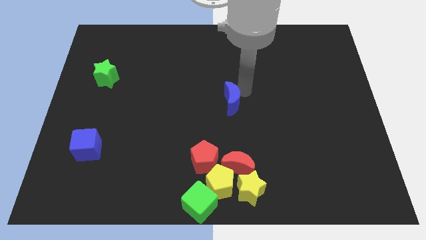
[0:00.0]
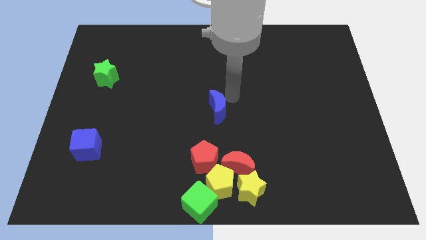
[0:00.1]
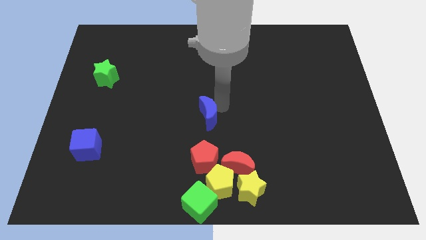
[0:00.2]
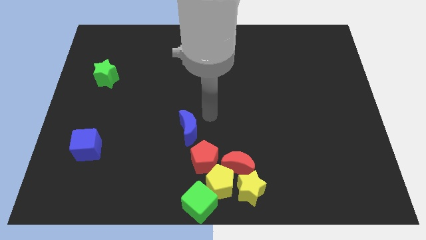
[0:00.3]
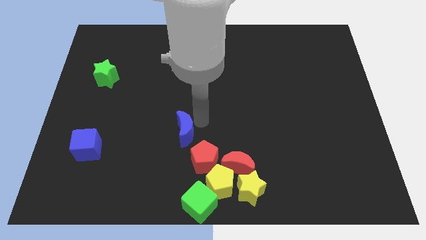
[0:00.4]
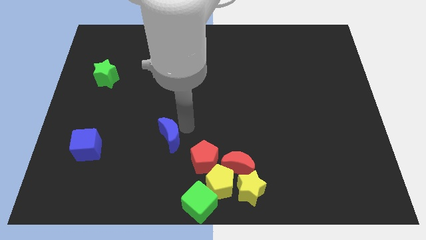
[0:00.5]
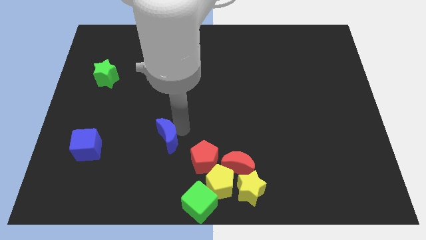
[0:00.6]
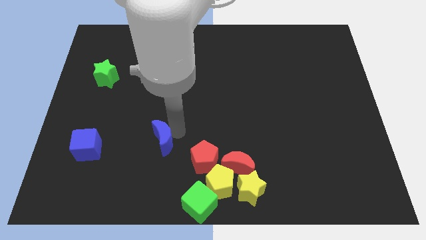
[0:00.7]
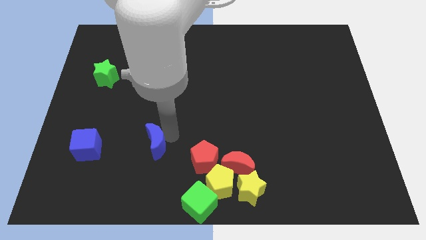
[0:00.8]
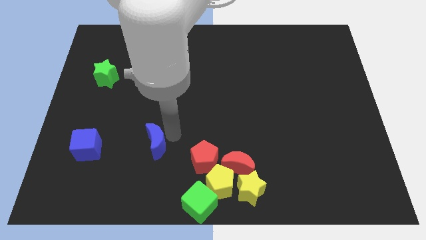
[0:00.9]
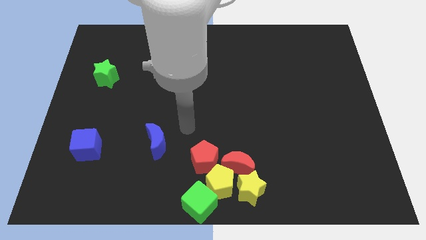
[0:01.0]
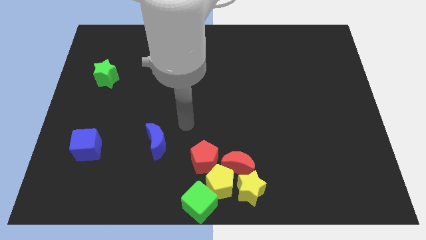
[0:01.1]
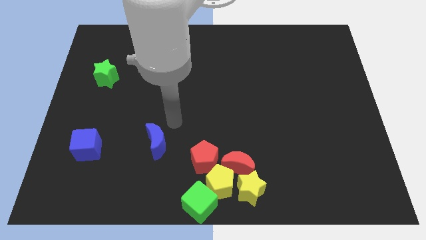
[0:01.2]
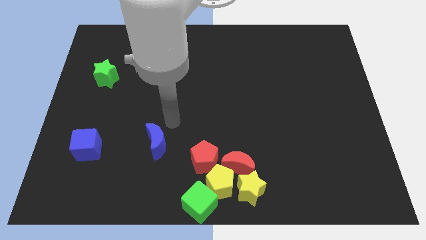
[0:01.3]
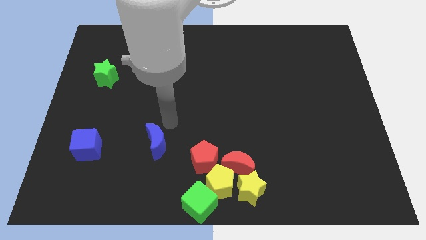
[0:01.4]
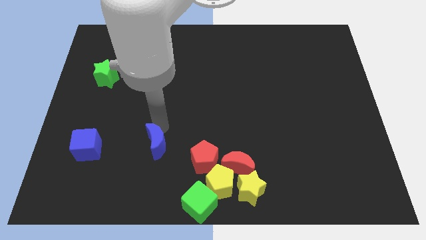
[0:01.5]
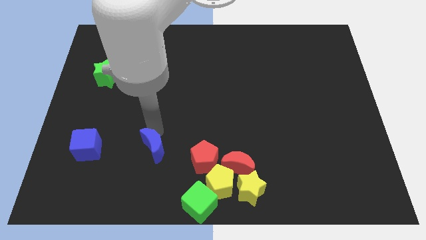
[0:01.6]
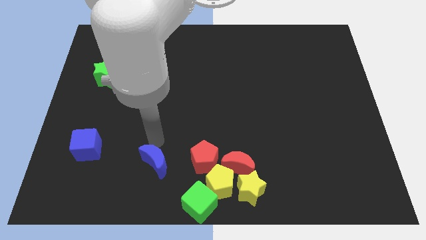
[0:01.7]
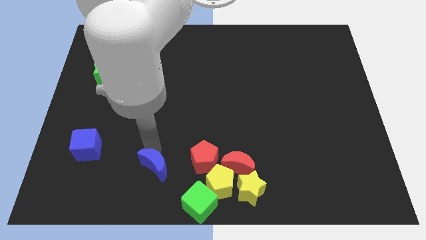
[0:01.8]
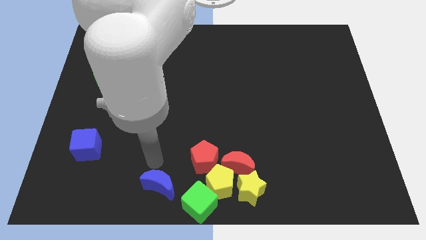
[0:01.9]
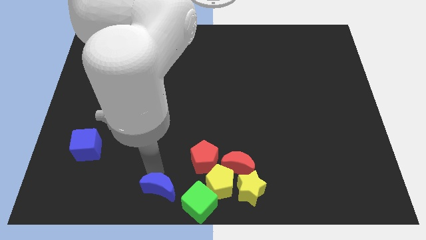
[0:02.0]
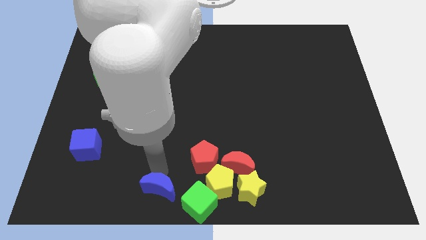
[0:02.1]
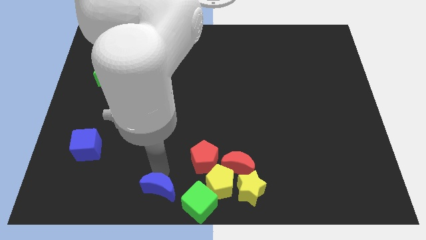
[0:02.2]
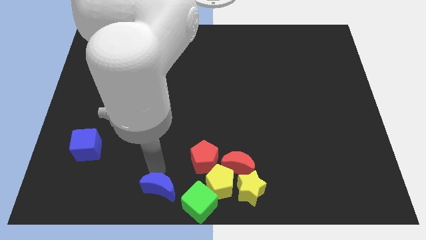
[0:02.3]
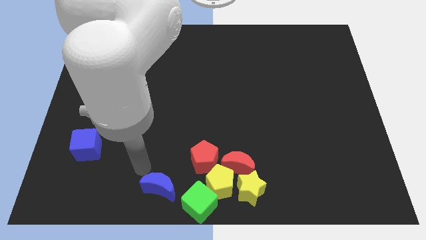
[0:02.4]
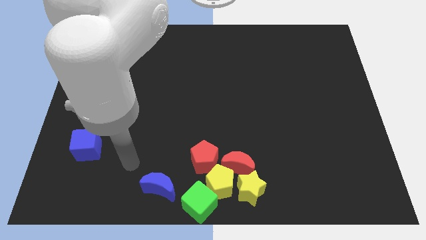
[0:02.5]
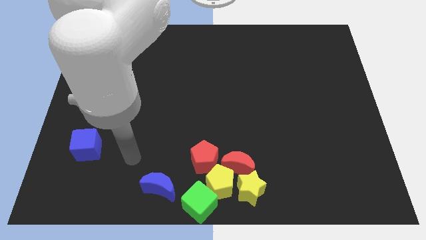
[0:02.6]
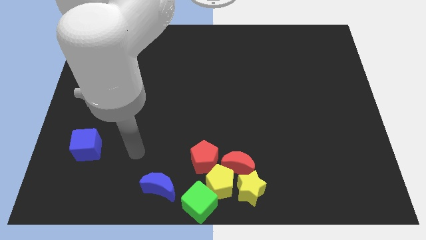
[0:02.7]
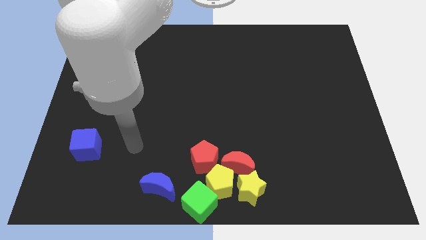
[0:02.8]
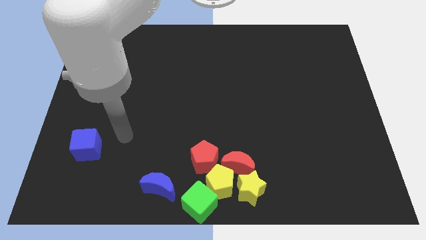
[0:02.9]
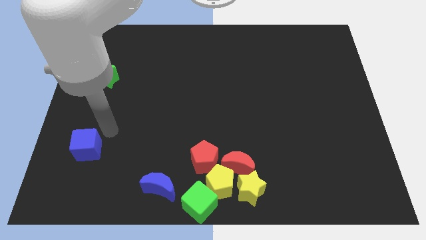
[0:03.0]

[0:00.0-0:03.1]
push the blue crescent downwards at the upper side of the green cube

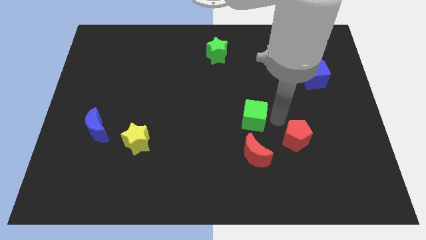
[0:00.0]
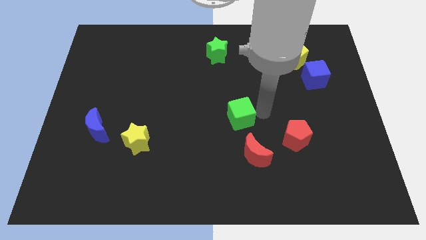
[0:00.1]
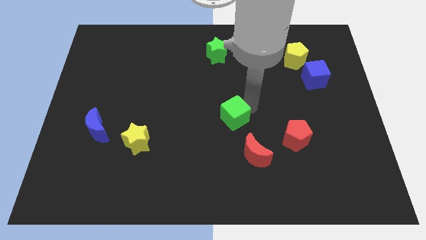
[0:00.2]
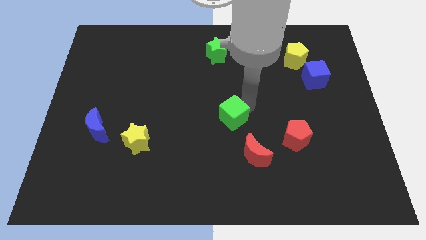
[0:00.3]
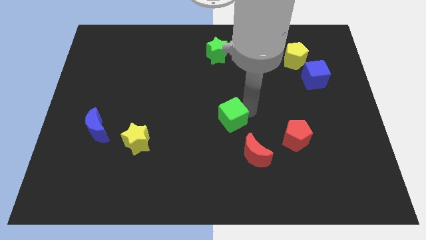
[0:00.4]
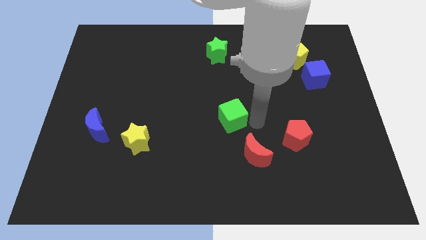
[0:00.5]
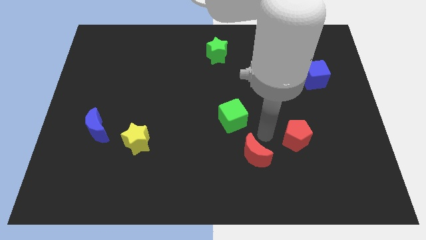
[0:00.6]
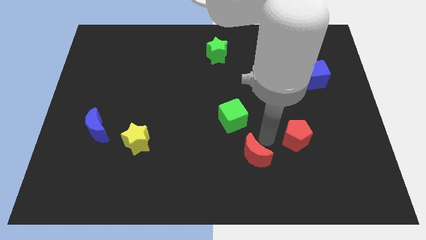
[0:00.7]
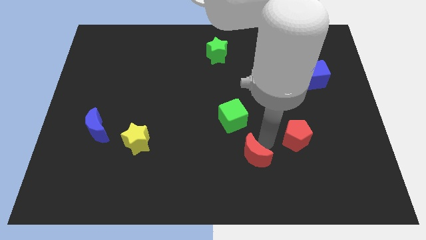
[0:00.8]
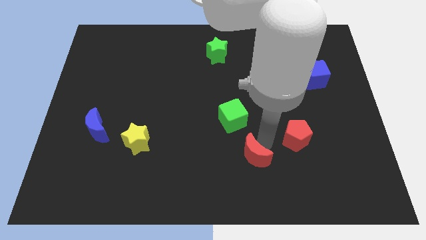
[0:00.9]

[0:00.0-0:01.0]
move green cube towards center

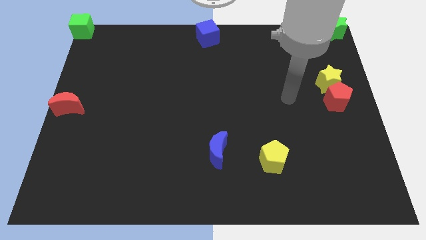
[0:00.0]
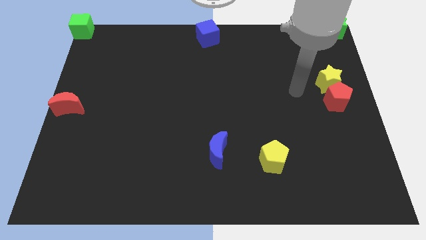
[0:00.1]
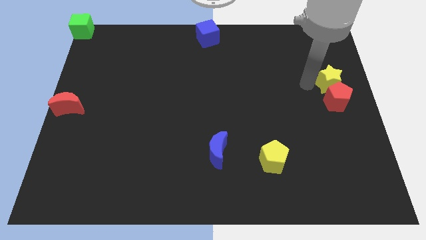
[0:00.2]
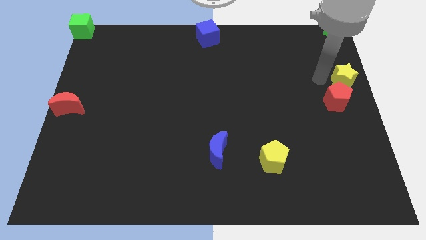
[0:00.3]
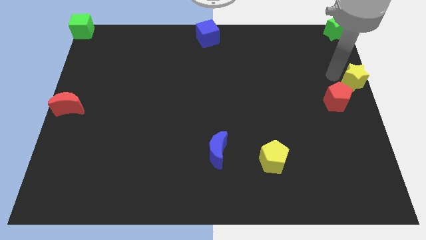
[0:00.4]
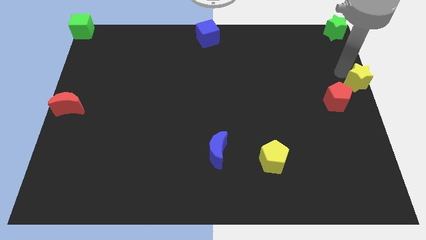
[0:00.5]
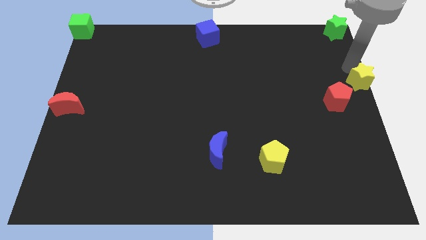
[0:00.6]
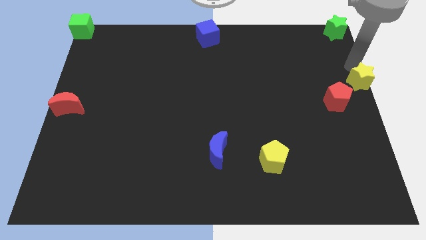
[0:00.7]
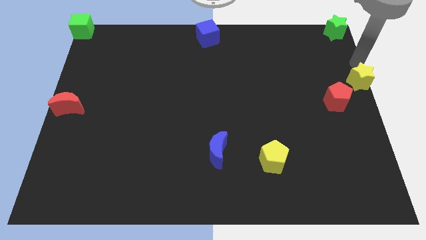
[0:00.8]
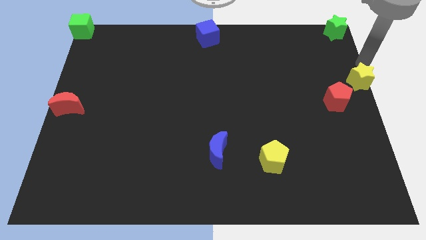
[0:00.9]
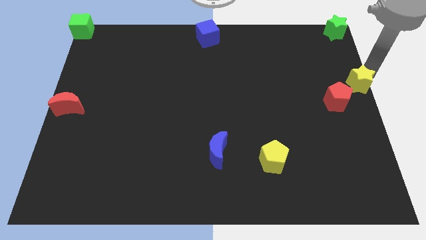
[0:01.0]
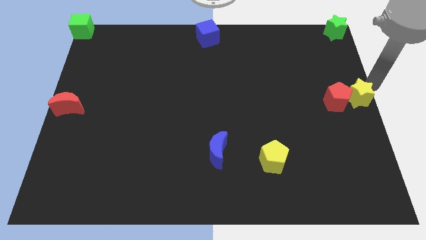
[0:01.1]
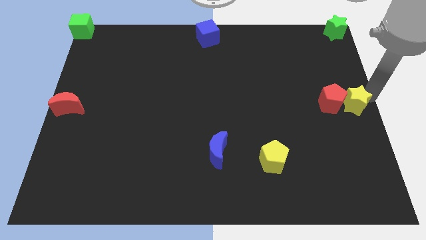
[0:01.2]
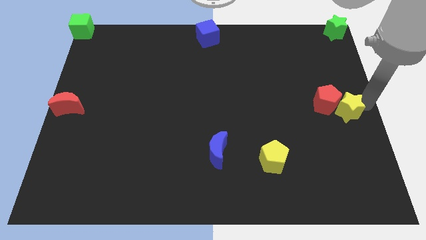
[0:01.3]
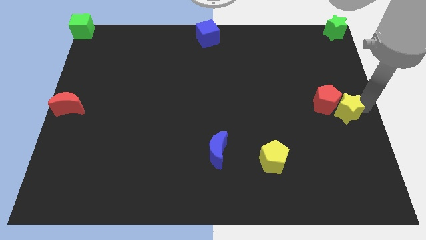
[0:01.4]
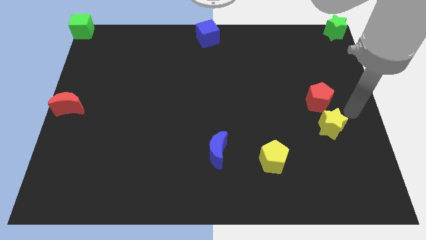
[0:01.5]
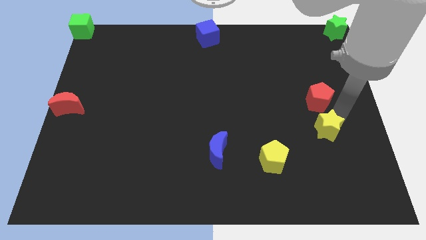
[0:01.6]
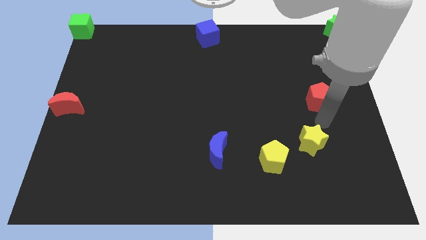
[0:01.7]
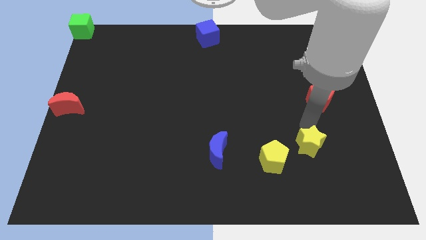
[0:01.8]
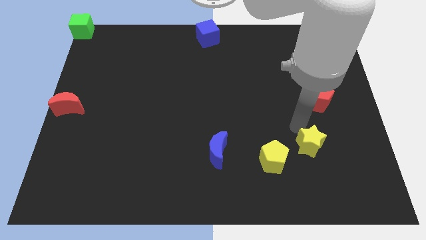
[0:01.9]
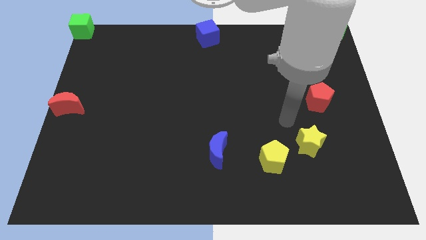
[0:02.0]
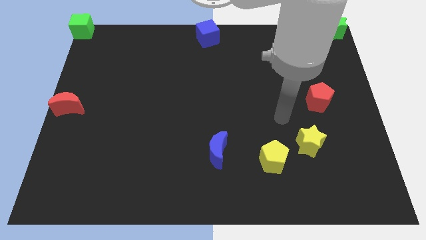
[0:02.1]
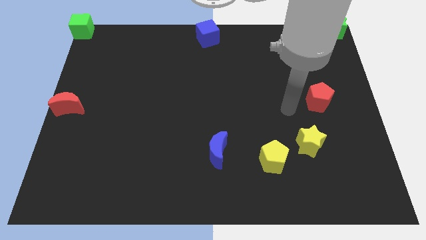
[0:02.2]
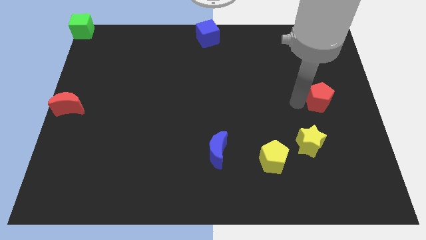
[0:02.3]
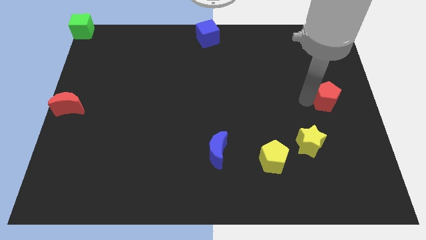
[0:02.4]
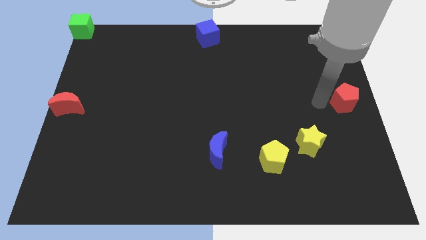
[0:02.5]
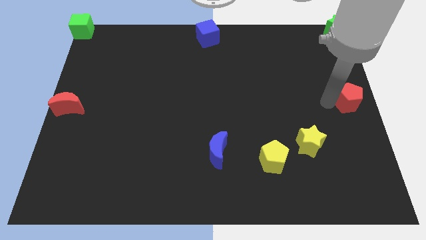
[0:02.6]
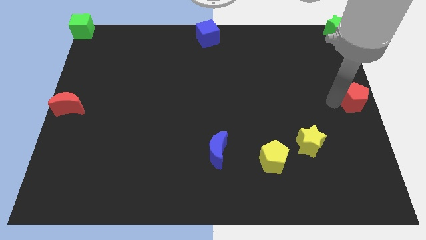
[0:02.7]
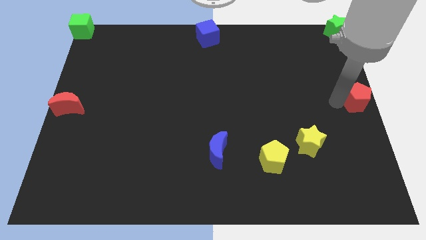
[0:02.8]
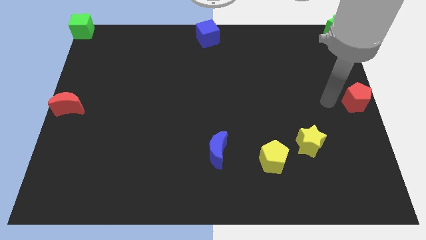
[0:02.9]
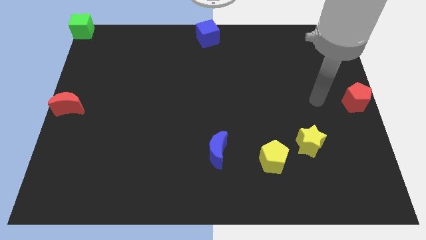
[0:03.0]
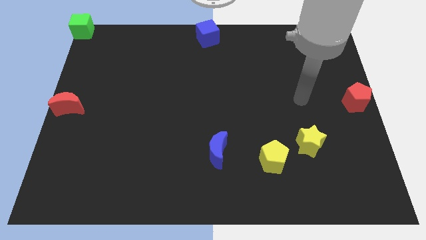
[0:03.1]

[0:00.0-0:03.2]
place the red pentagon diagonally top right to the yellow star

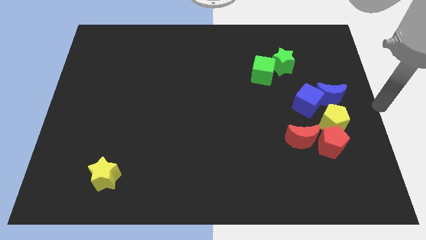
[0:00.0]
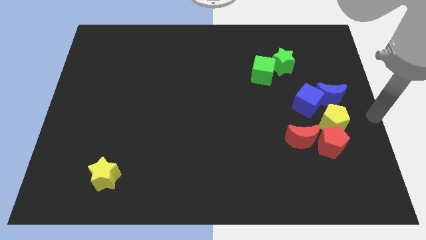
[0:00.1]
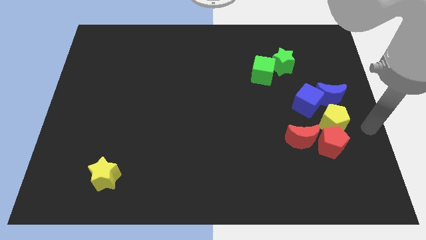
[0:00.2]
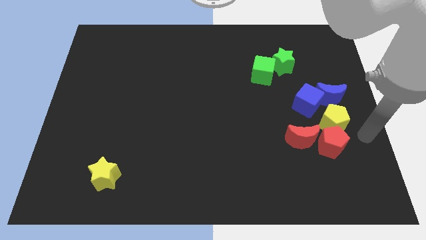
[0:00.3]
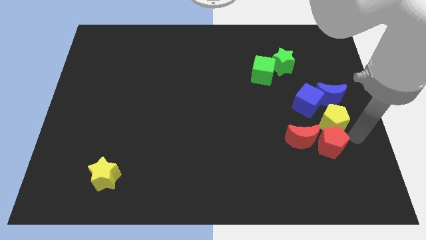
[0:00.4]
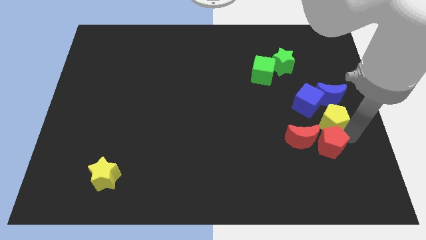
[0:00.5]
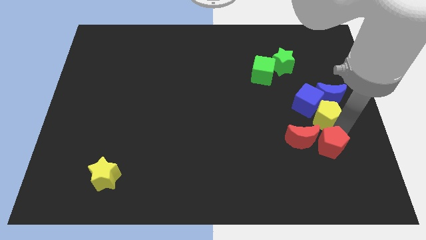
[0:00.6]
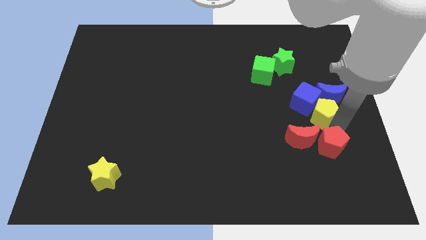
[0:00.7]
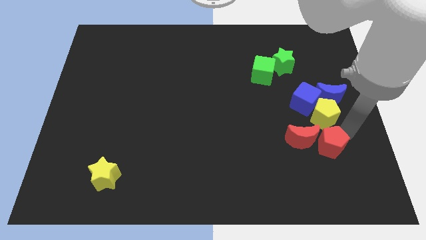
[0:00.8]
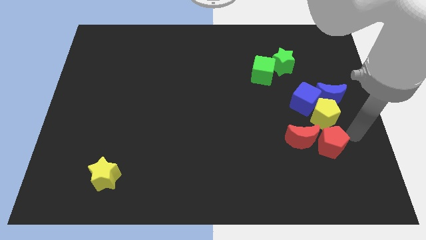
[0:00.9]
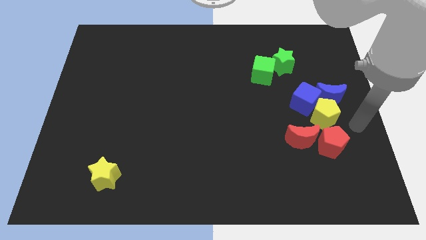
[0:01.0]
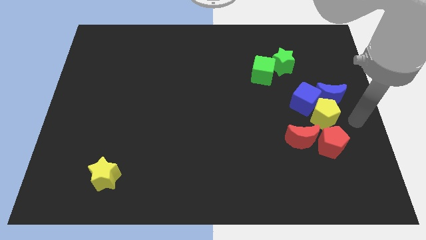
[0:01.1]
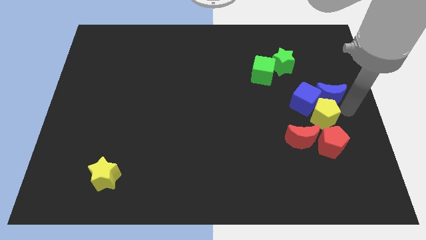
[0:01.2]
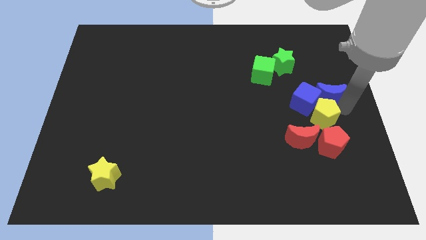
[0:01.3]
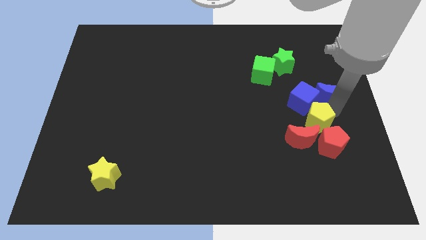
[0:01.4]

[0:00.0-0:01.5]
move the yellow pentagon into the blue blocks

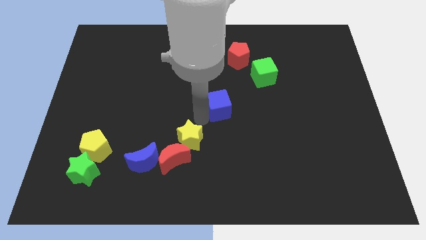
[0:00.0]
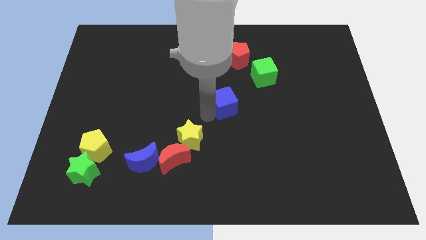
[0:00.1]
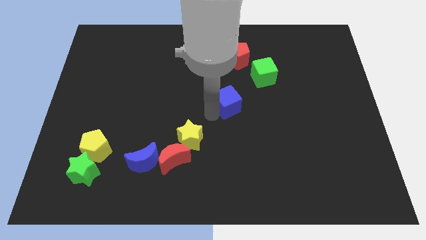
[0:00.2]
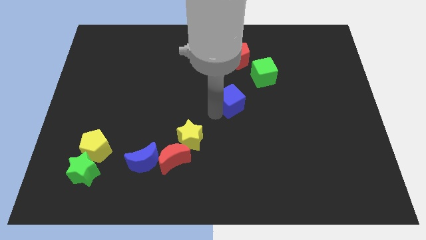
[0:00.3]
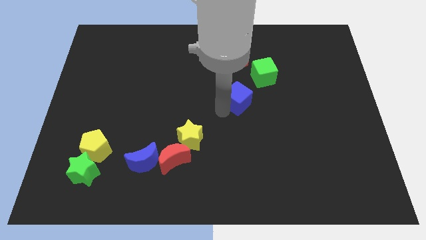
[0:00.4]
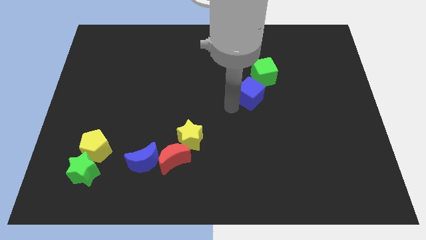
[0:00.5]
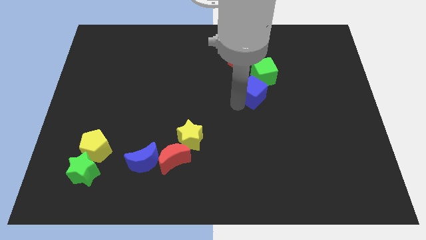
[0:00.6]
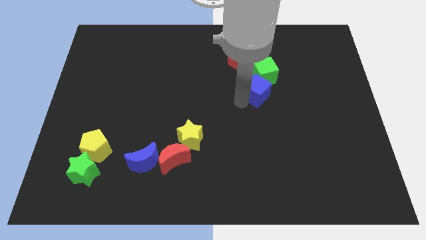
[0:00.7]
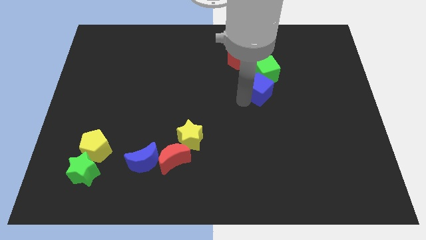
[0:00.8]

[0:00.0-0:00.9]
move blue cube towards green cube
